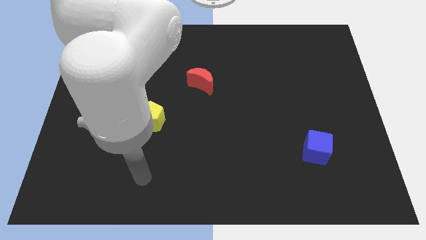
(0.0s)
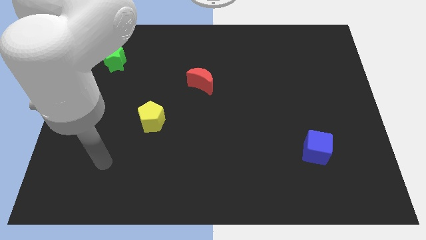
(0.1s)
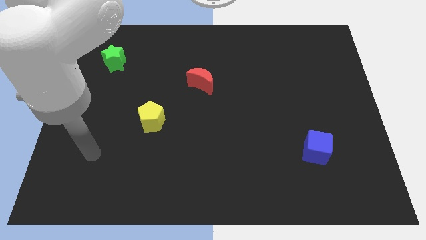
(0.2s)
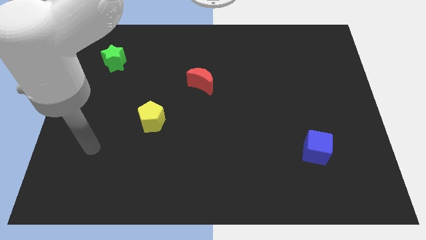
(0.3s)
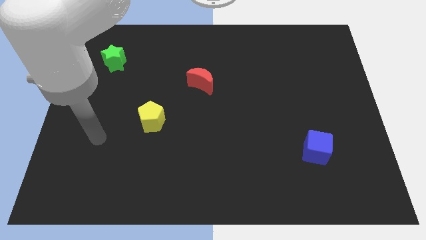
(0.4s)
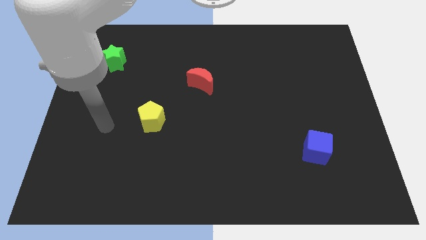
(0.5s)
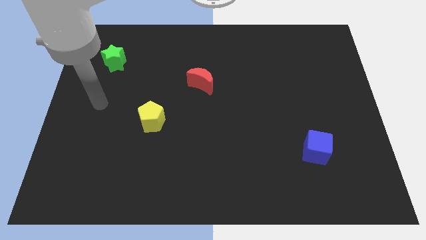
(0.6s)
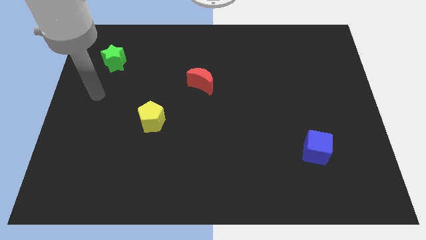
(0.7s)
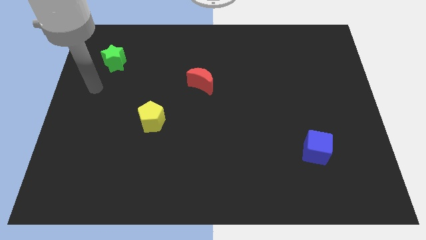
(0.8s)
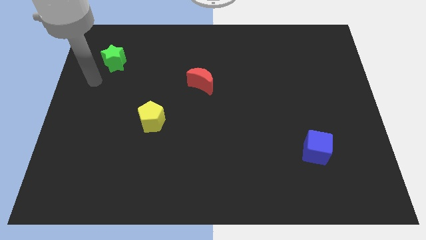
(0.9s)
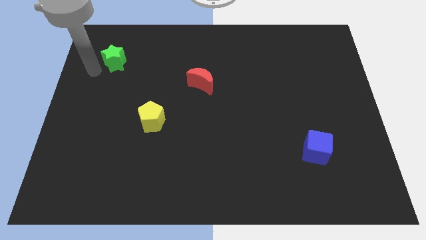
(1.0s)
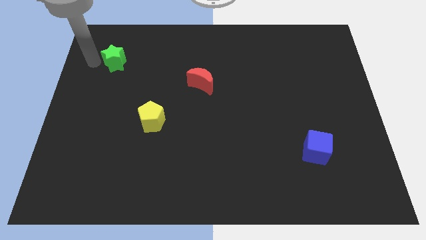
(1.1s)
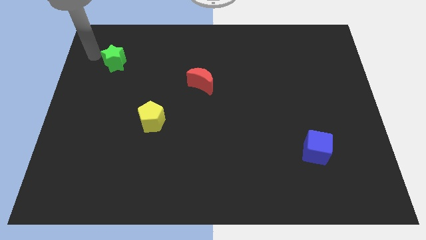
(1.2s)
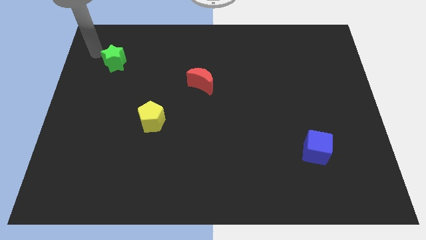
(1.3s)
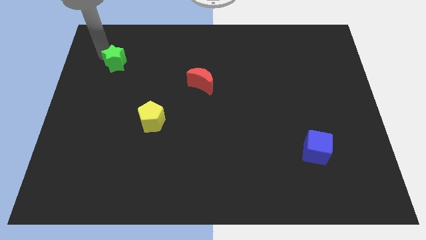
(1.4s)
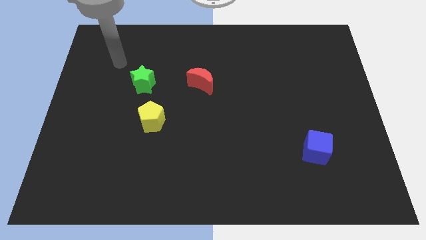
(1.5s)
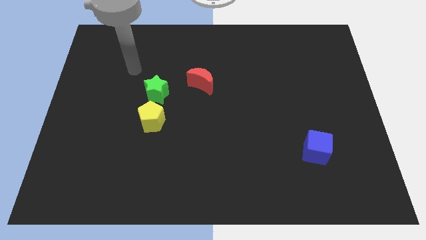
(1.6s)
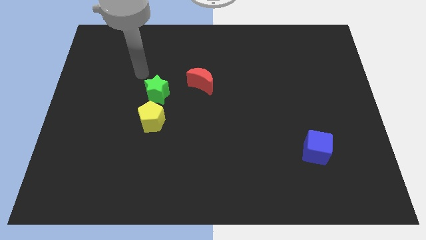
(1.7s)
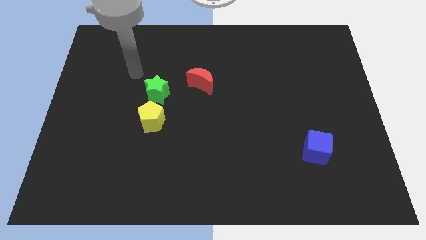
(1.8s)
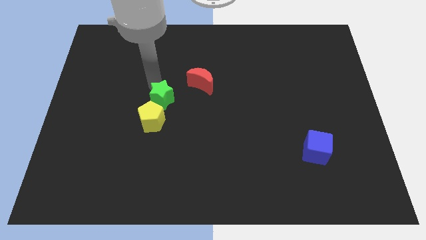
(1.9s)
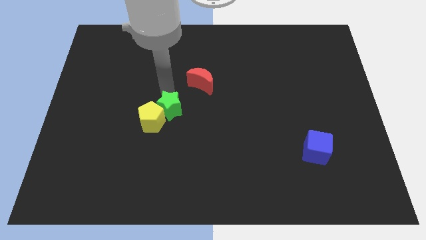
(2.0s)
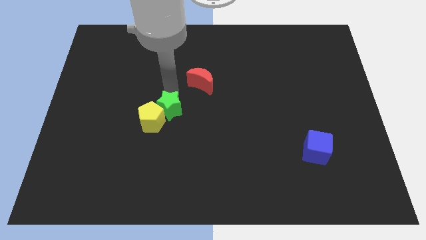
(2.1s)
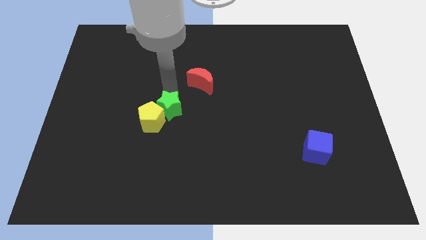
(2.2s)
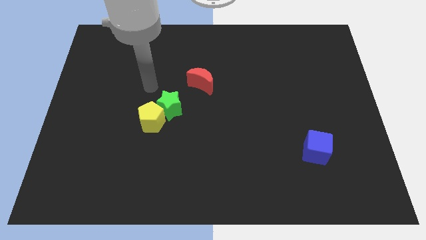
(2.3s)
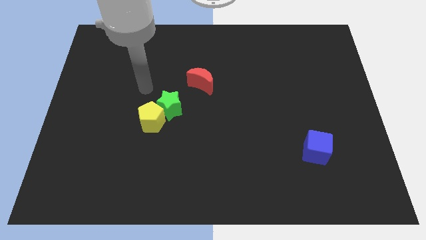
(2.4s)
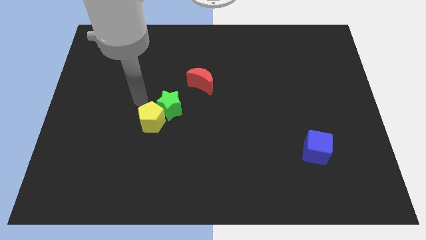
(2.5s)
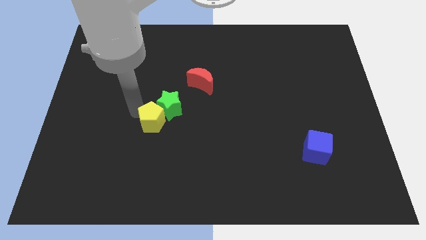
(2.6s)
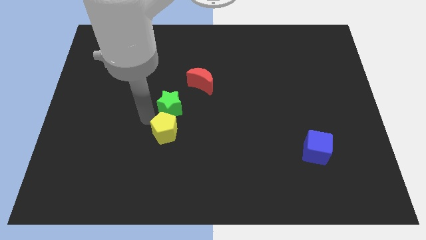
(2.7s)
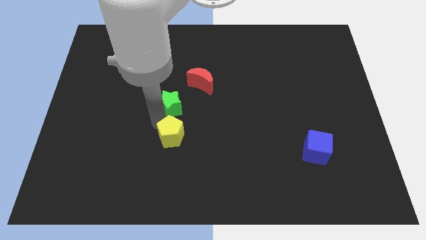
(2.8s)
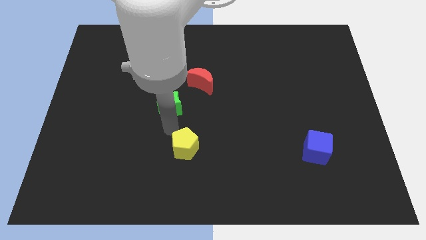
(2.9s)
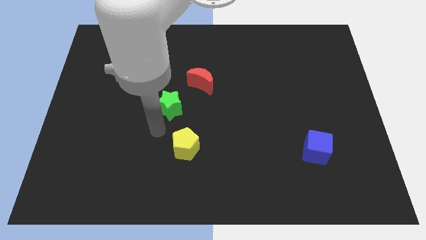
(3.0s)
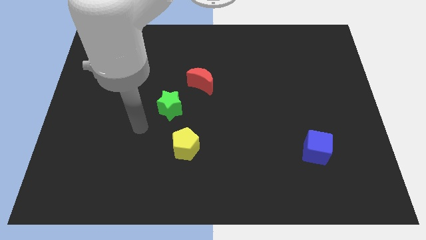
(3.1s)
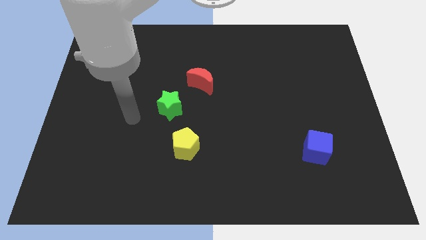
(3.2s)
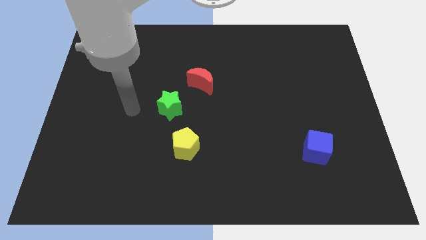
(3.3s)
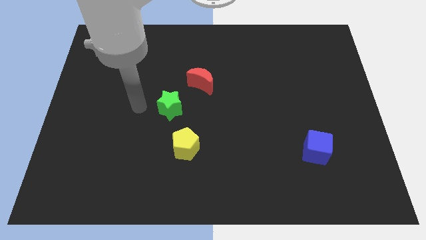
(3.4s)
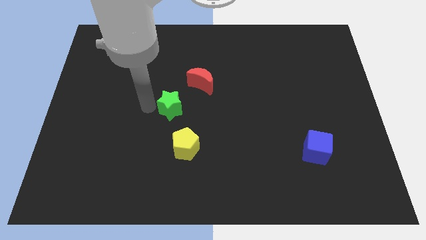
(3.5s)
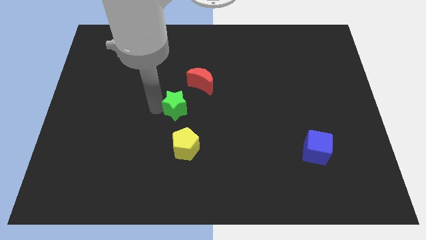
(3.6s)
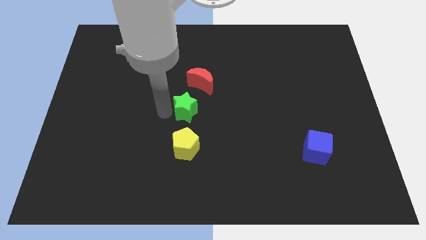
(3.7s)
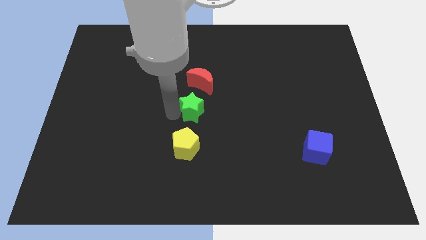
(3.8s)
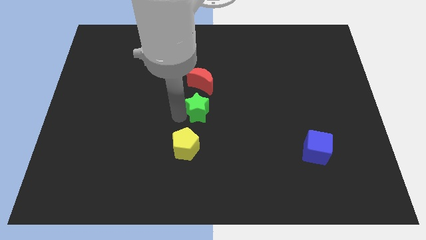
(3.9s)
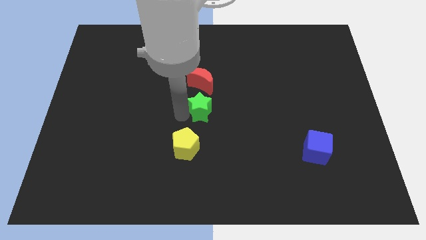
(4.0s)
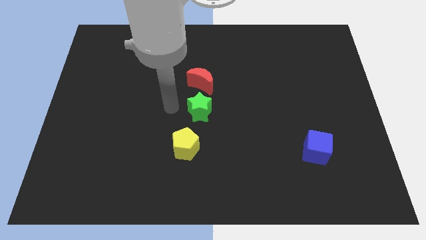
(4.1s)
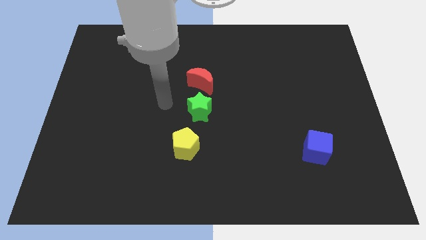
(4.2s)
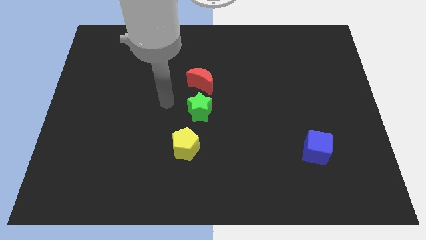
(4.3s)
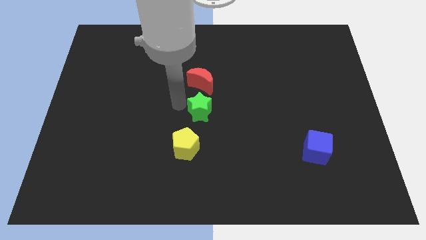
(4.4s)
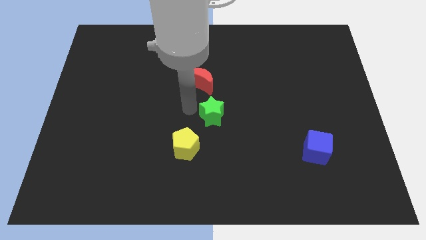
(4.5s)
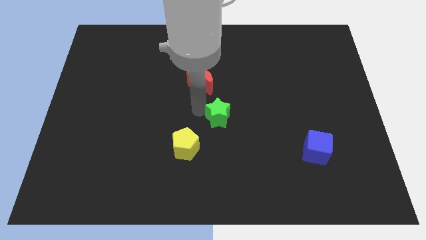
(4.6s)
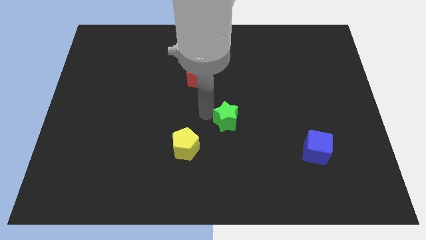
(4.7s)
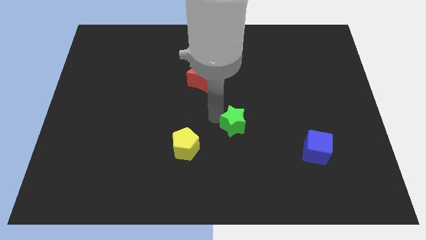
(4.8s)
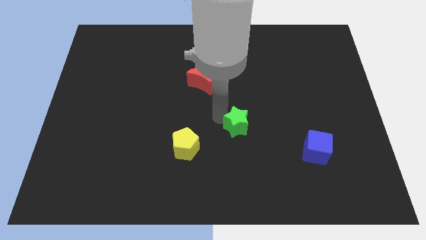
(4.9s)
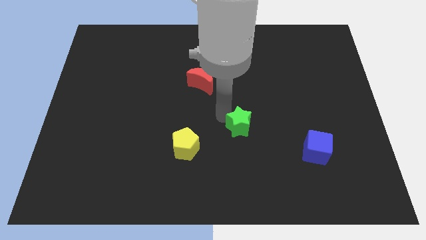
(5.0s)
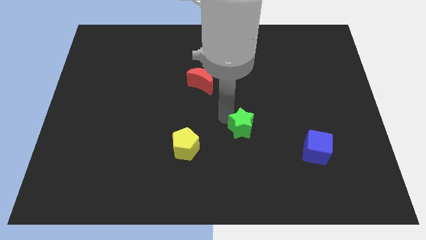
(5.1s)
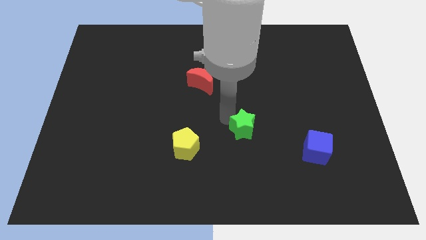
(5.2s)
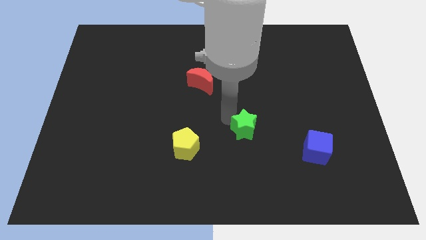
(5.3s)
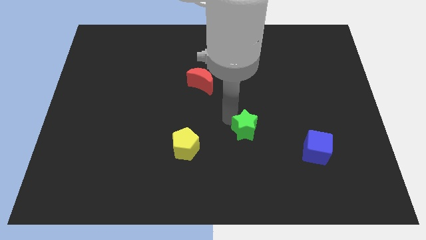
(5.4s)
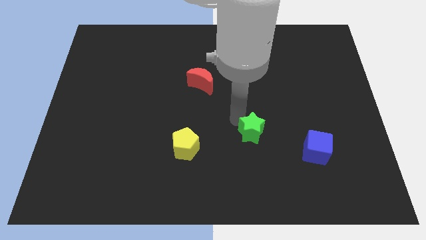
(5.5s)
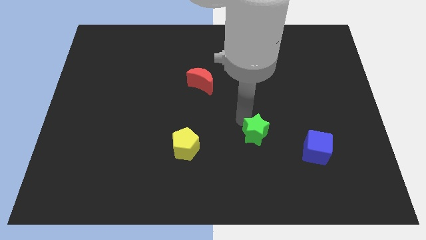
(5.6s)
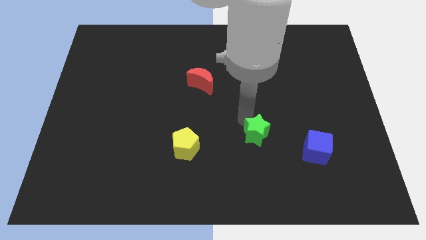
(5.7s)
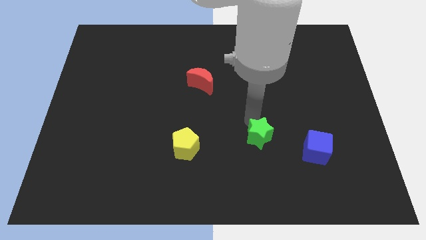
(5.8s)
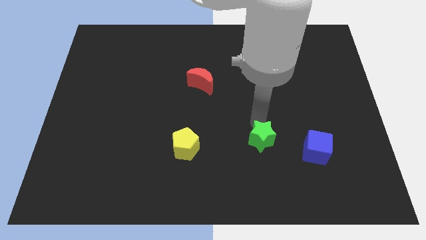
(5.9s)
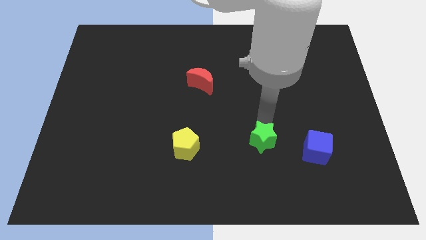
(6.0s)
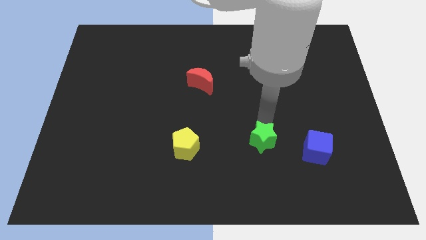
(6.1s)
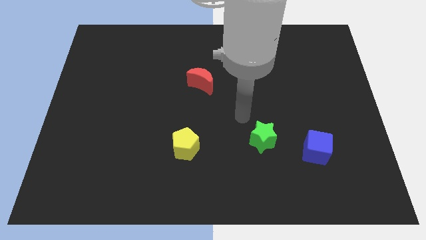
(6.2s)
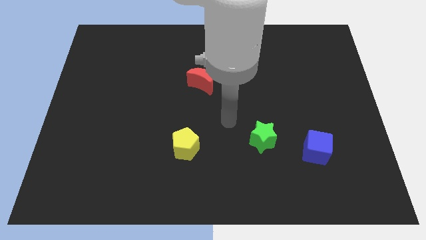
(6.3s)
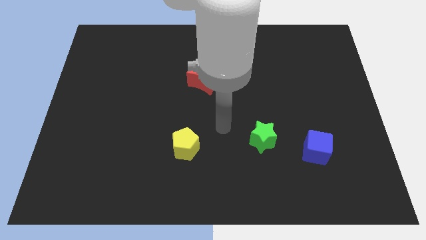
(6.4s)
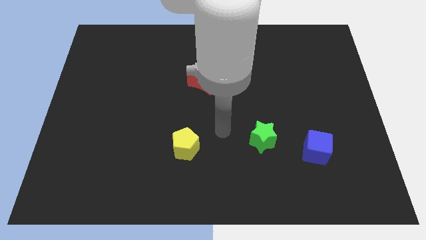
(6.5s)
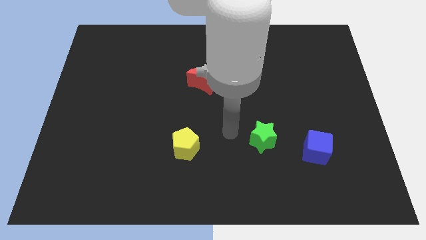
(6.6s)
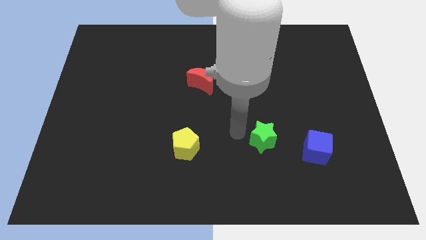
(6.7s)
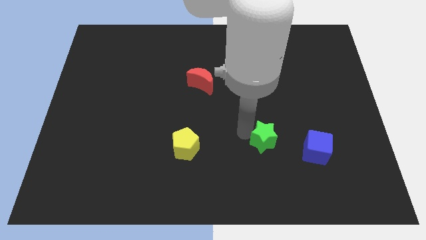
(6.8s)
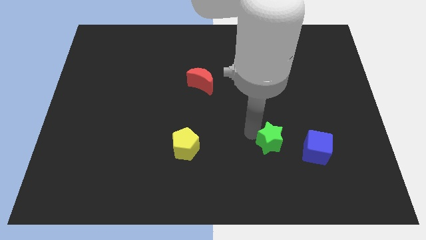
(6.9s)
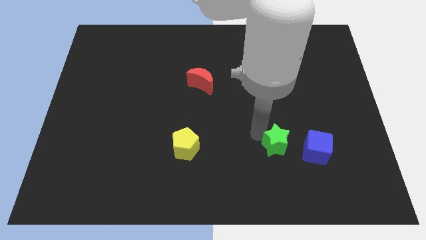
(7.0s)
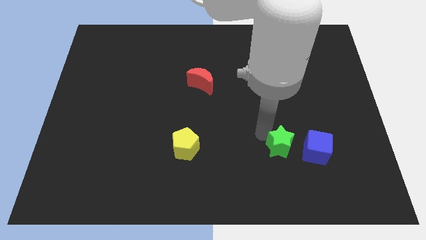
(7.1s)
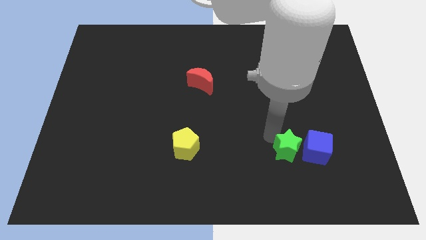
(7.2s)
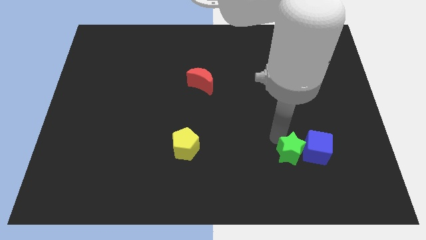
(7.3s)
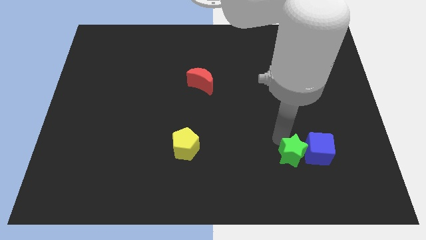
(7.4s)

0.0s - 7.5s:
slide the green block towards the blue block

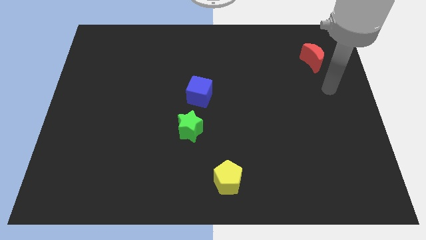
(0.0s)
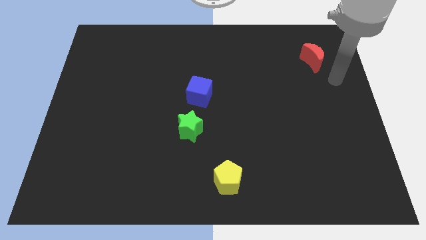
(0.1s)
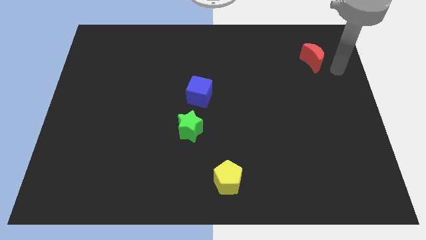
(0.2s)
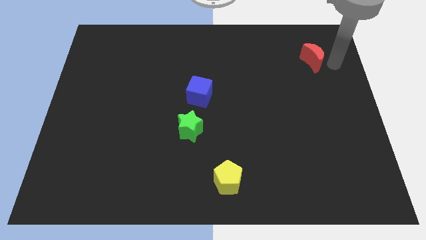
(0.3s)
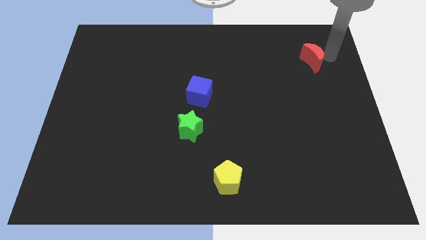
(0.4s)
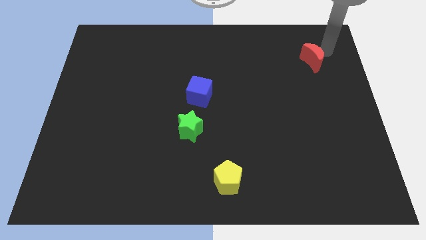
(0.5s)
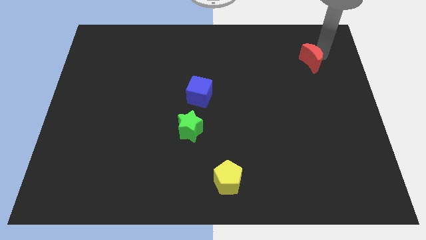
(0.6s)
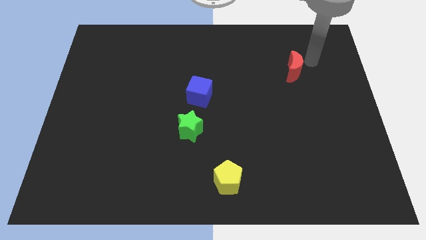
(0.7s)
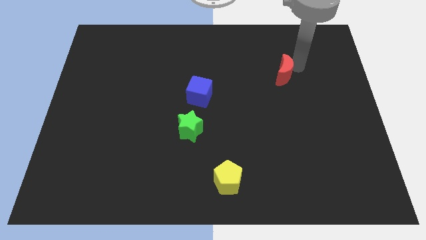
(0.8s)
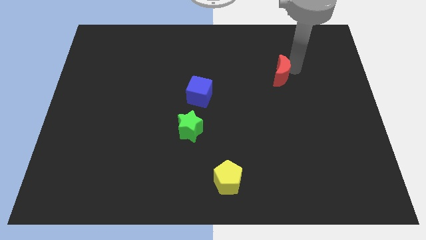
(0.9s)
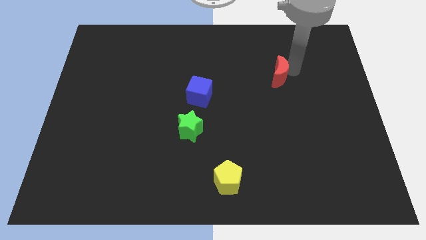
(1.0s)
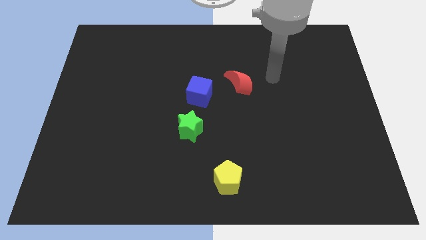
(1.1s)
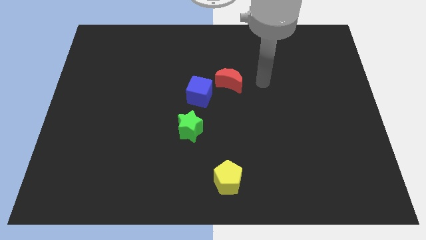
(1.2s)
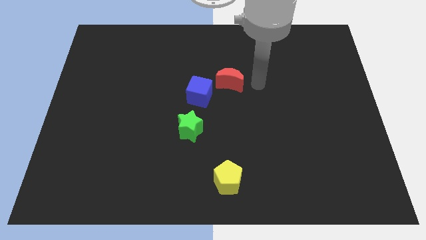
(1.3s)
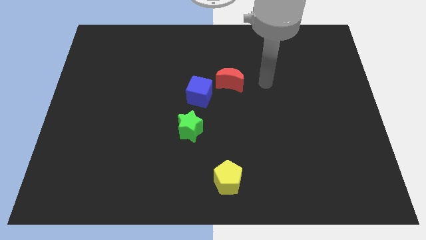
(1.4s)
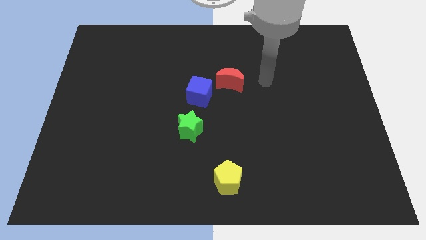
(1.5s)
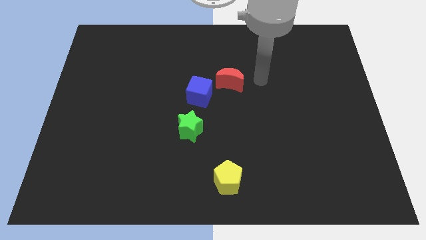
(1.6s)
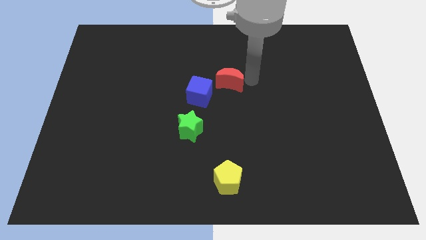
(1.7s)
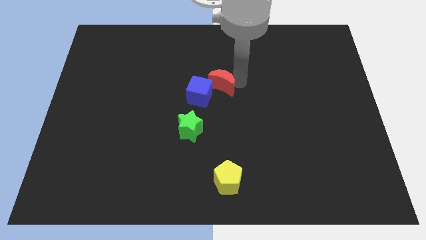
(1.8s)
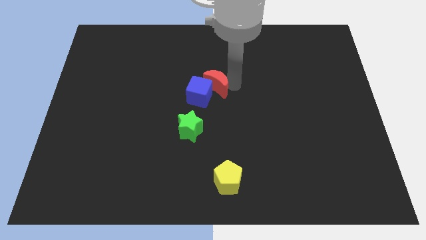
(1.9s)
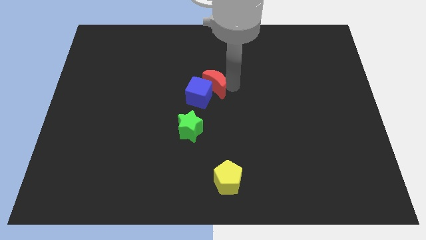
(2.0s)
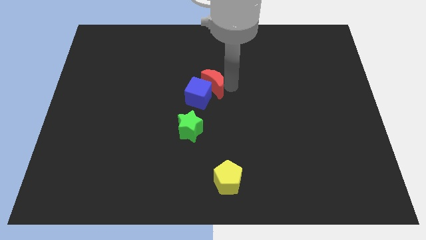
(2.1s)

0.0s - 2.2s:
slide the moon next to the blue cube
